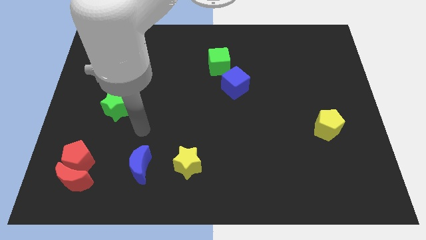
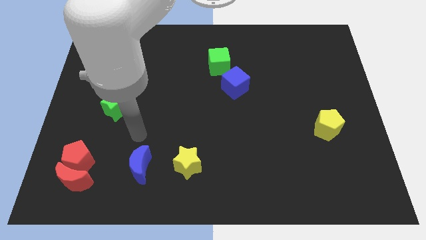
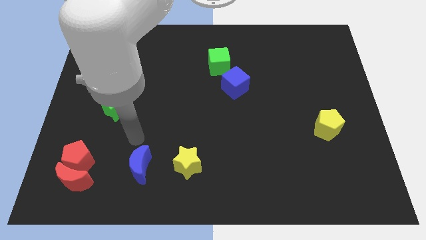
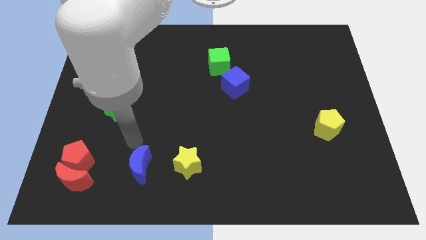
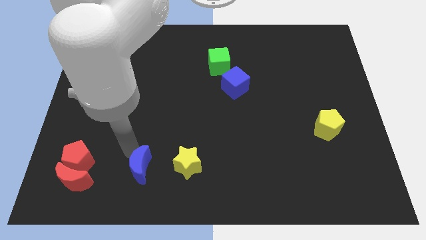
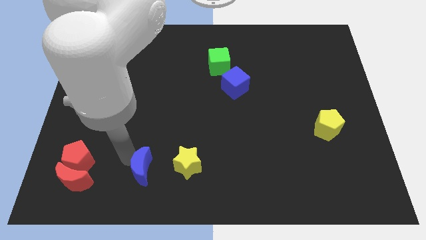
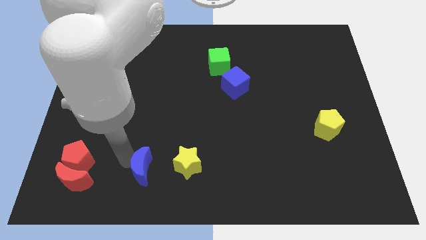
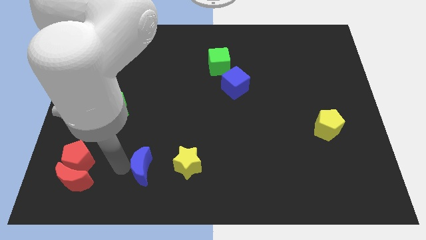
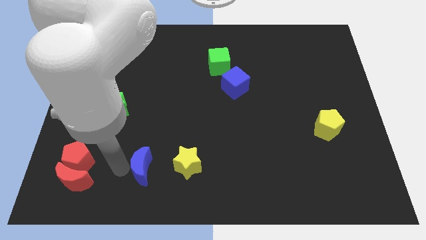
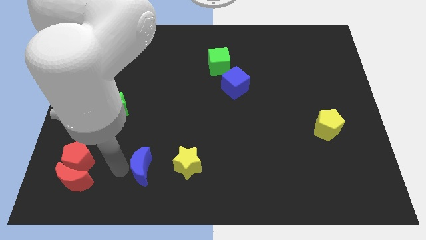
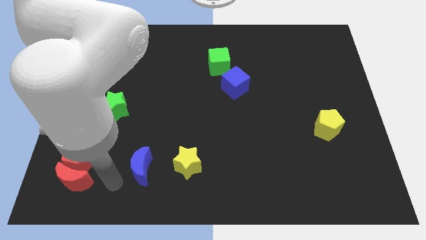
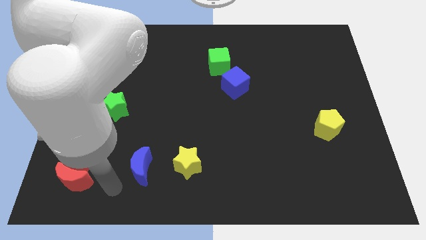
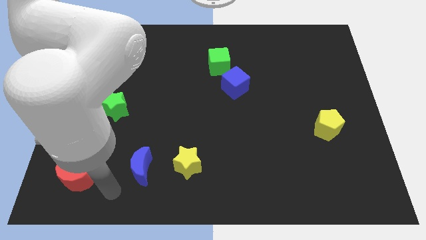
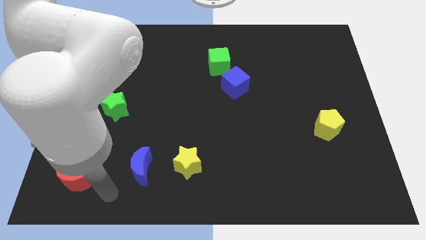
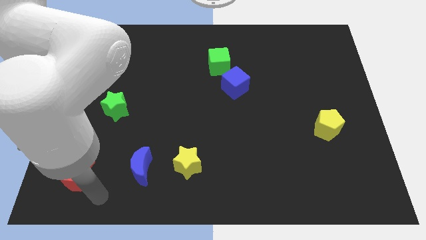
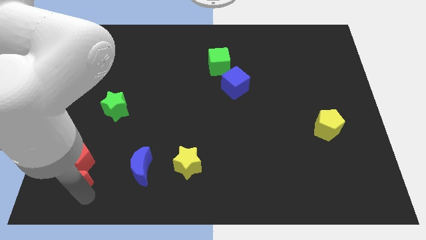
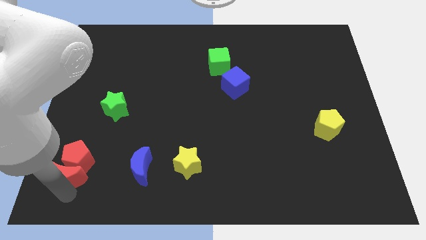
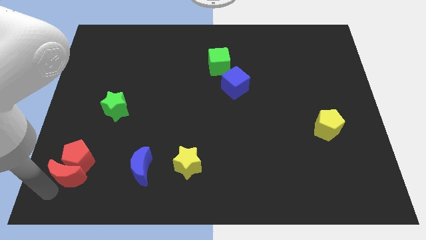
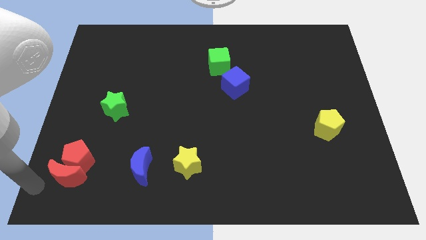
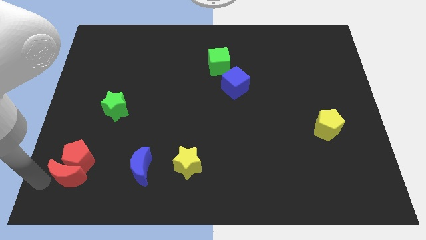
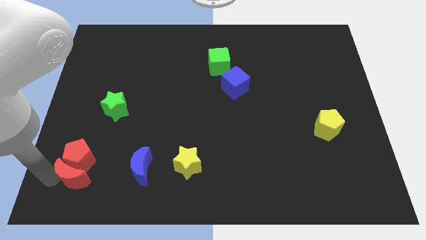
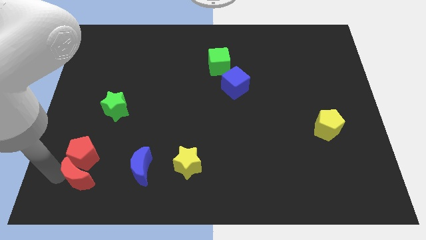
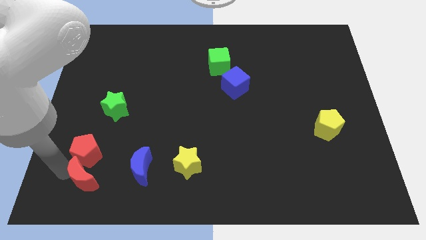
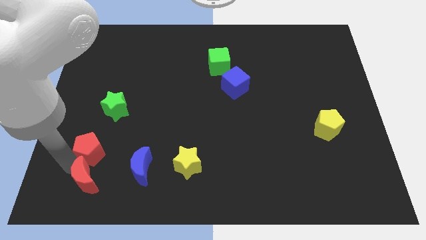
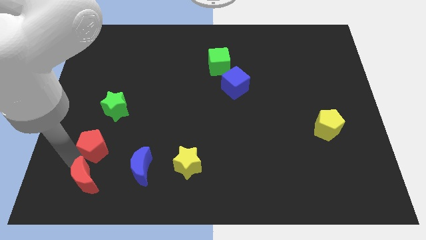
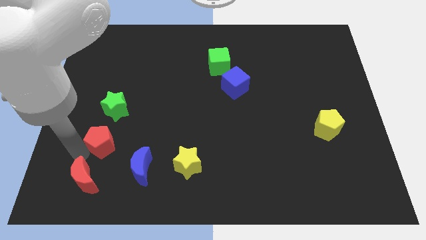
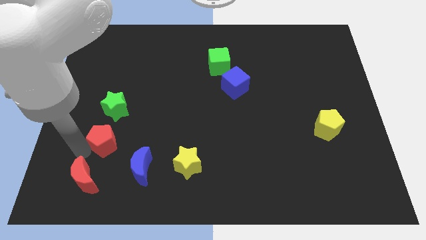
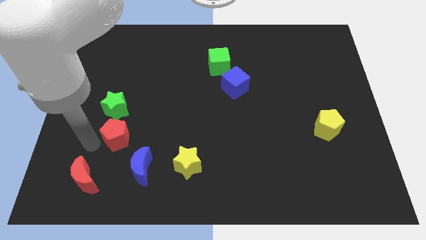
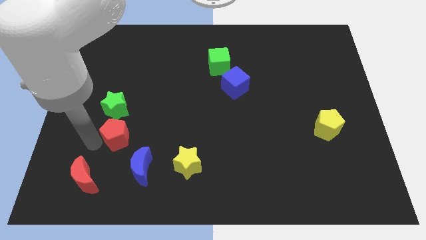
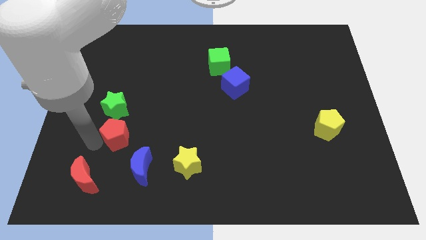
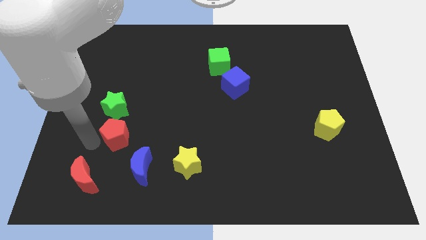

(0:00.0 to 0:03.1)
push red pentagon below green star

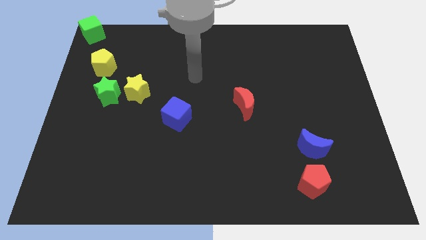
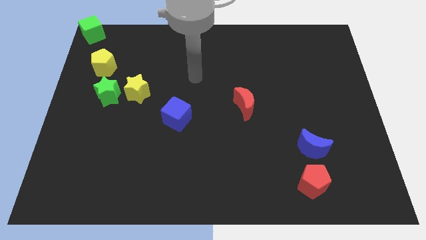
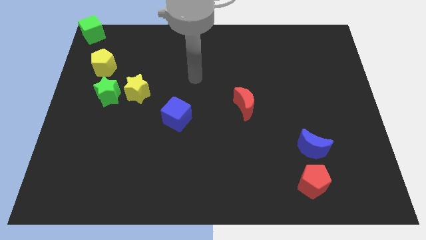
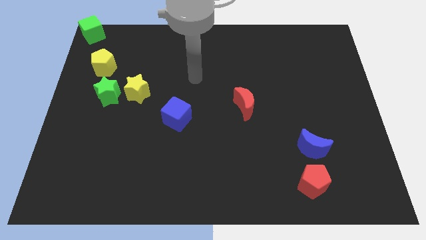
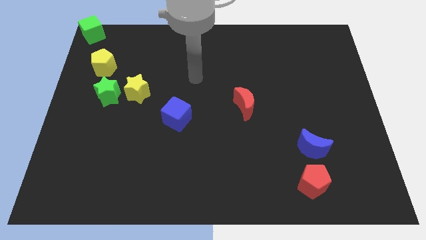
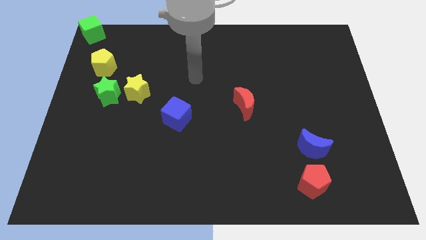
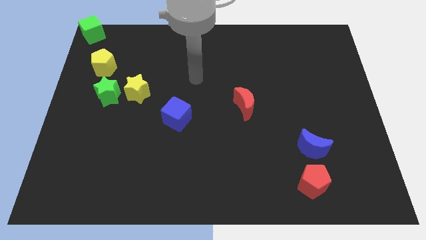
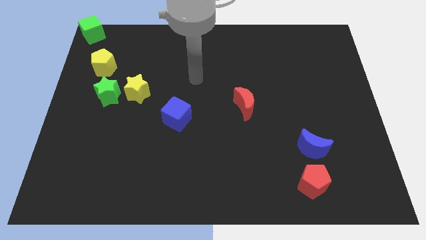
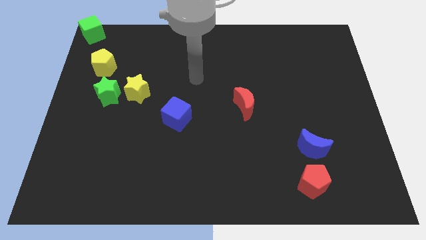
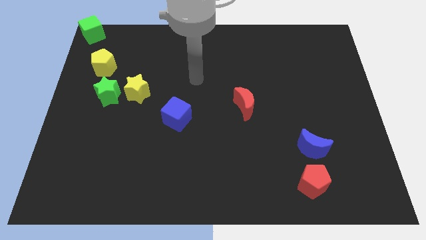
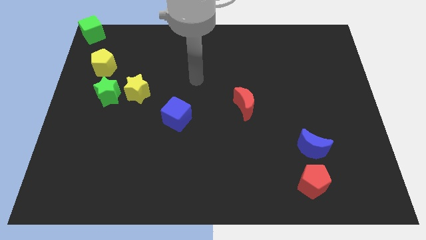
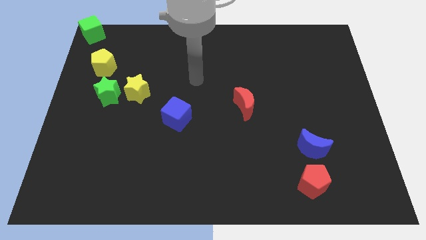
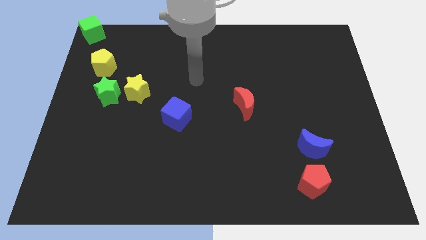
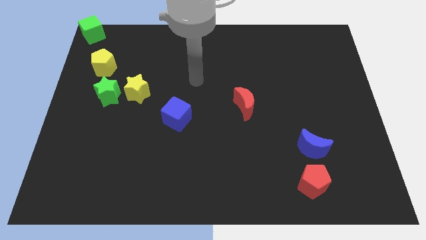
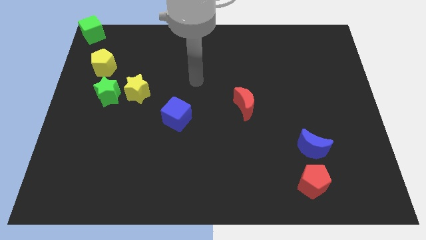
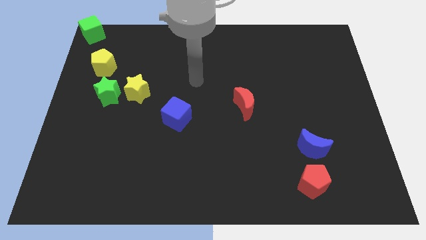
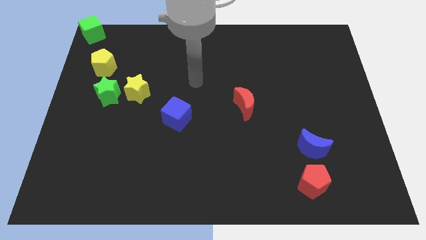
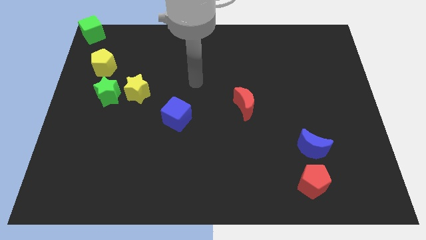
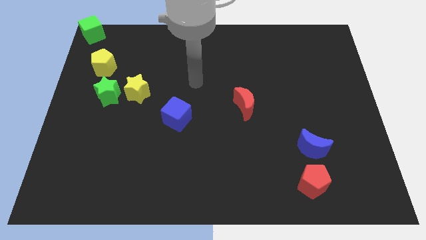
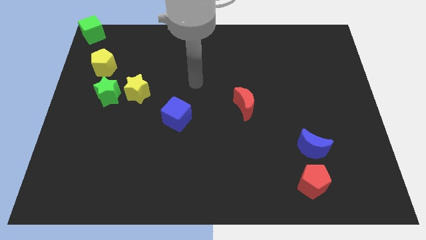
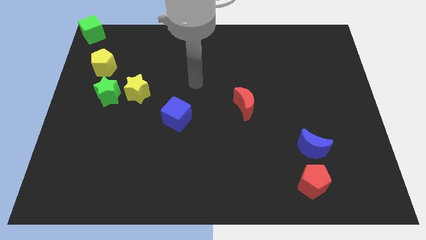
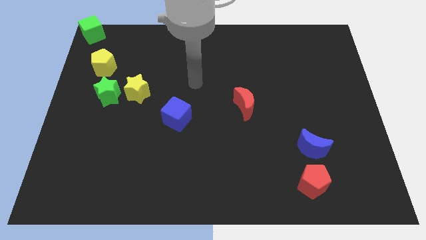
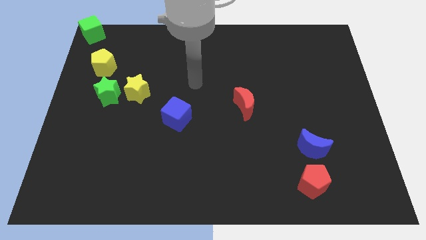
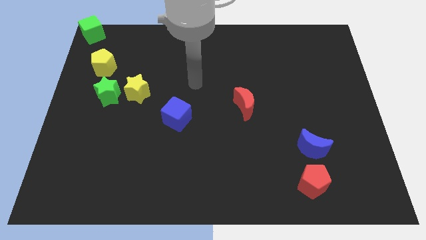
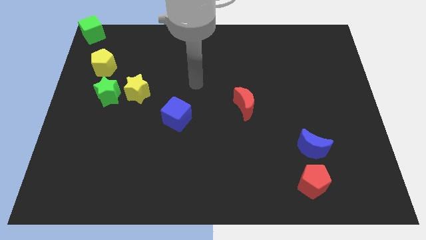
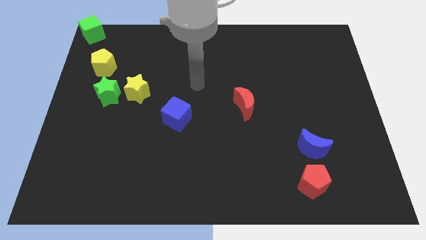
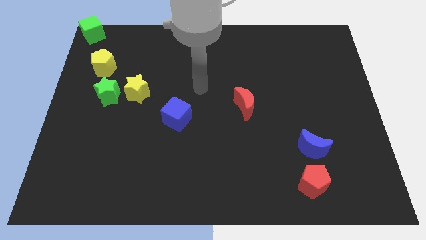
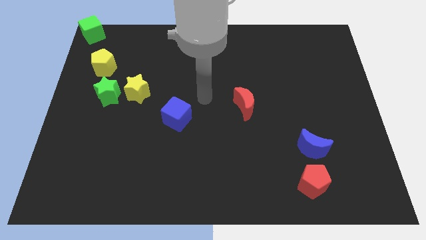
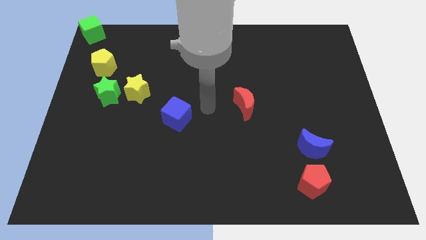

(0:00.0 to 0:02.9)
point your arm at the centre of the board

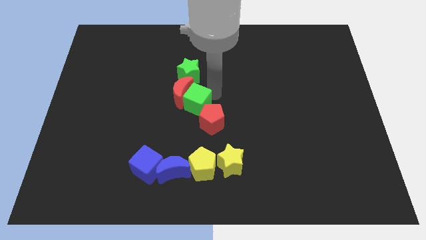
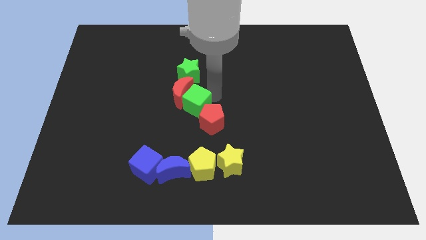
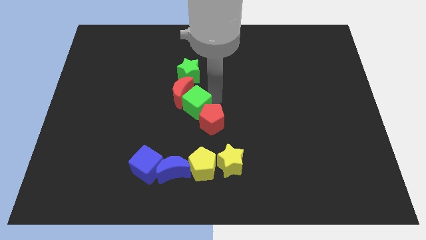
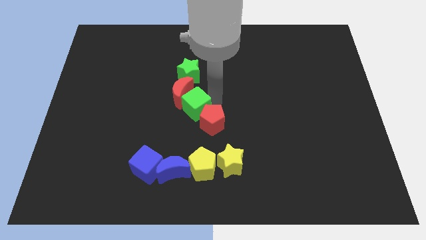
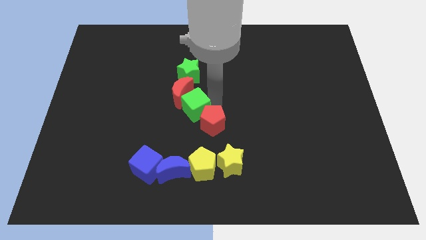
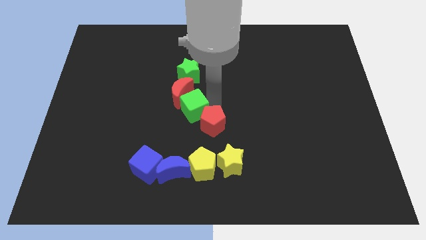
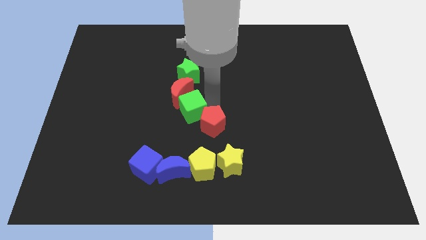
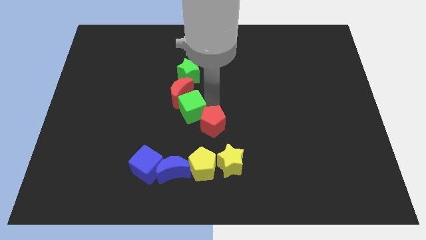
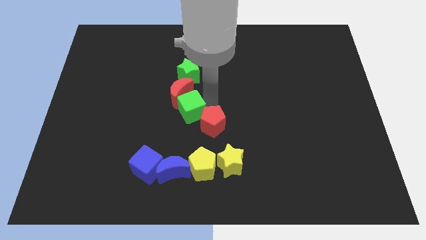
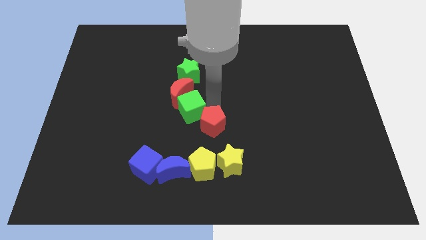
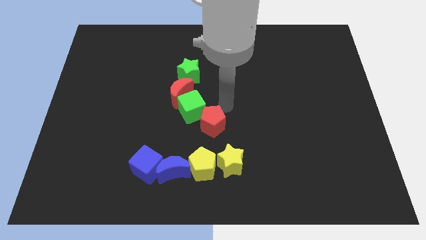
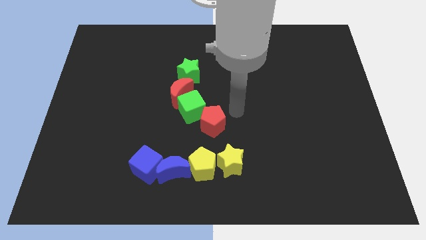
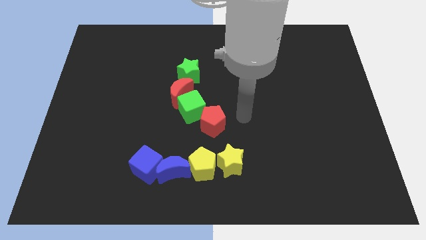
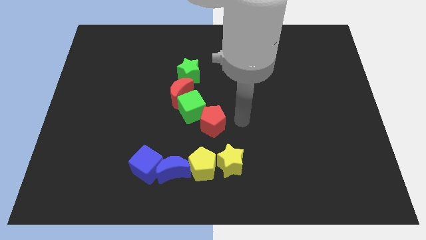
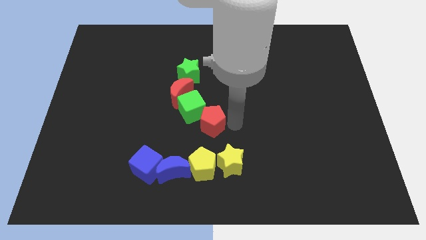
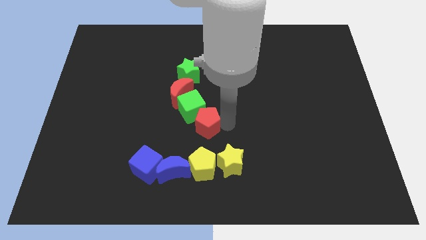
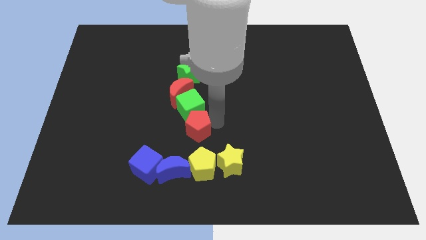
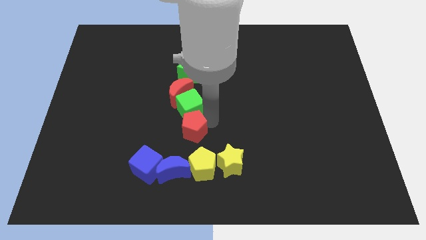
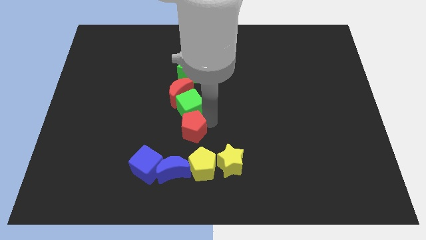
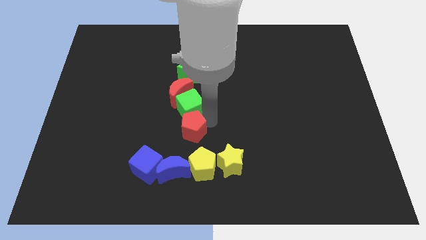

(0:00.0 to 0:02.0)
move the red pentagon below the green cube

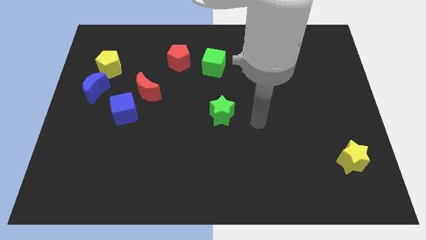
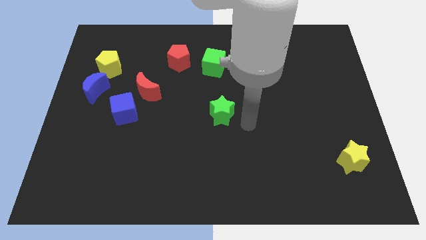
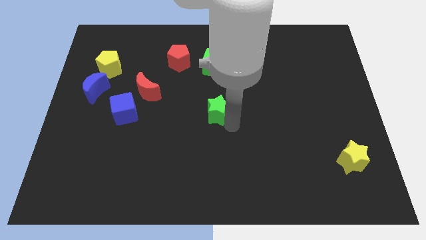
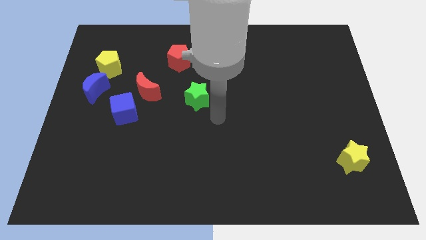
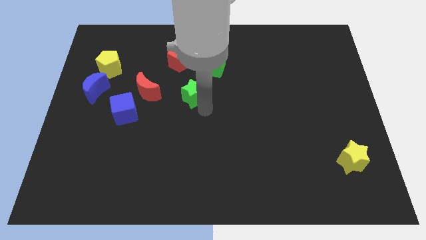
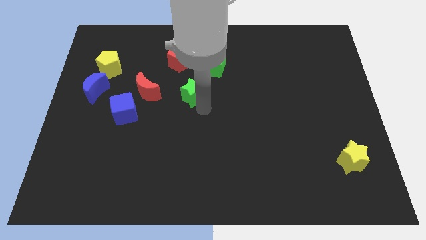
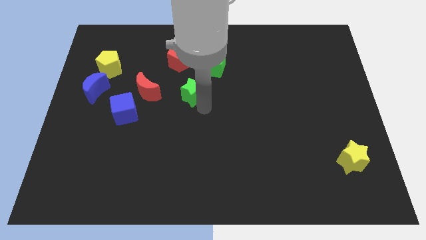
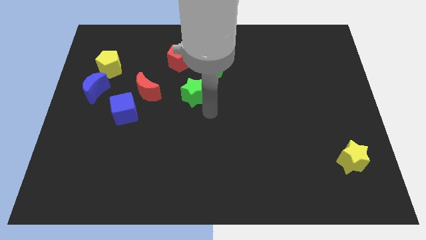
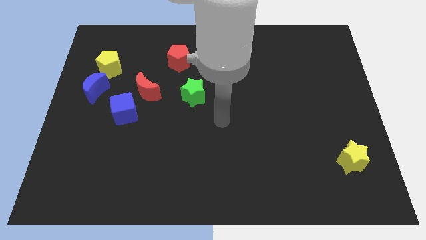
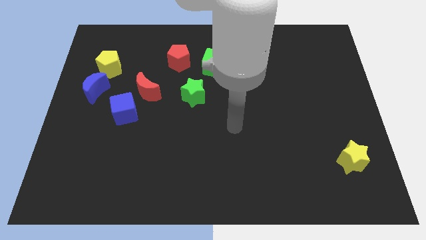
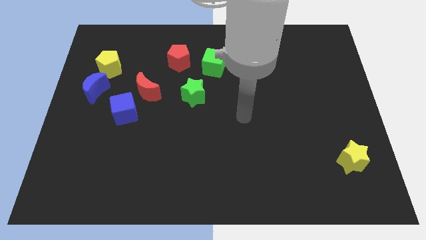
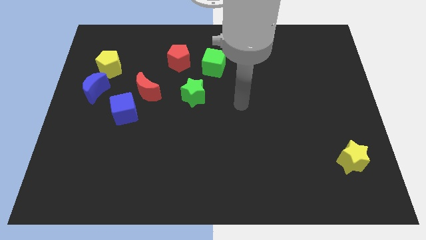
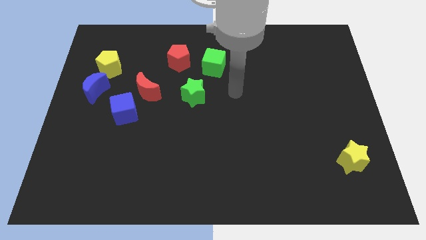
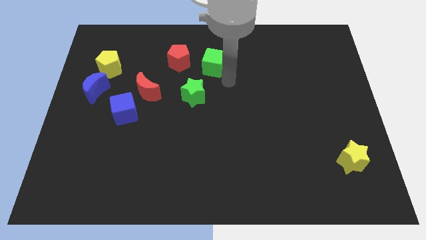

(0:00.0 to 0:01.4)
place green star to the bottom left of green cube
